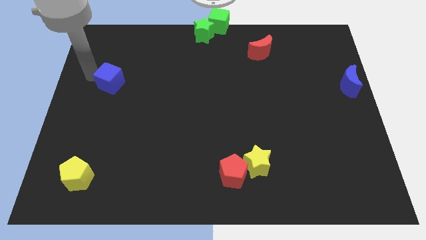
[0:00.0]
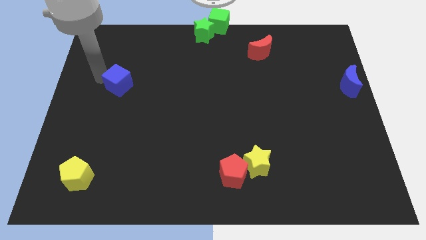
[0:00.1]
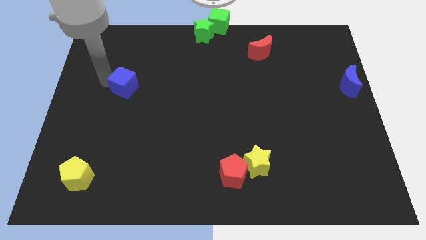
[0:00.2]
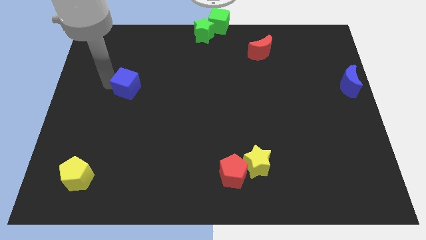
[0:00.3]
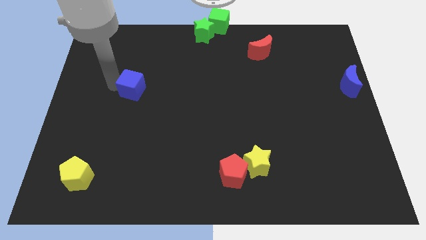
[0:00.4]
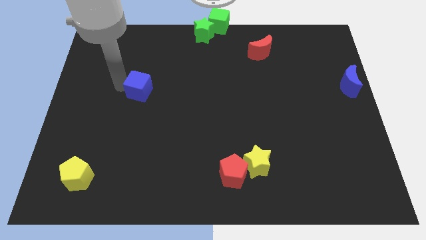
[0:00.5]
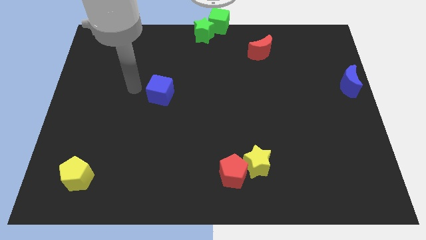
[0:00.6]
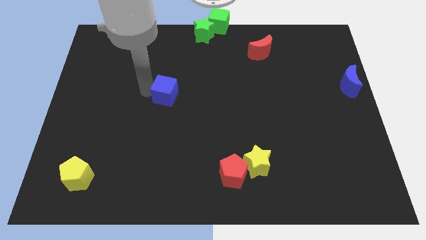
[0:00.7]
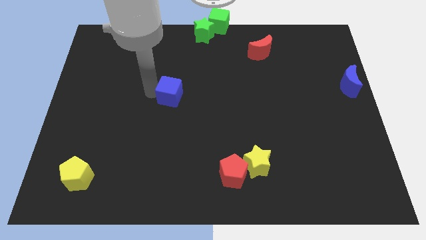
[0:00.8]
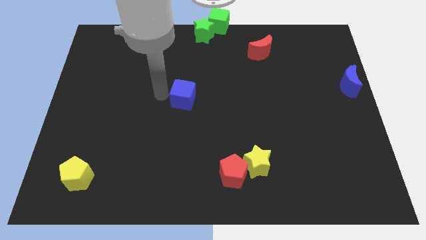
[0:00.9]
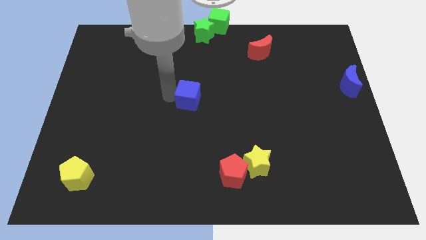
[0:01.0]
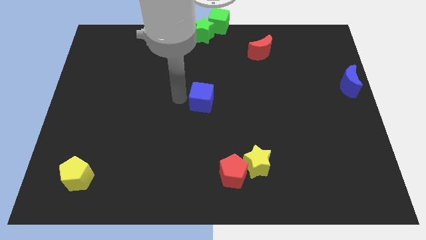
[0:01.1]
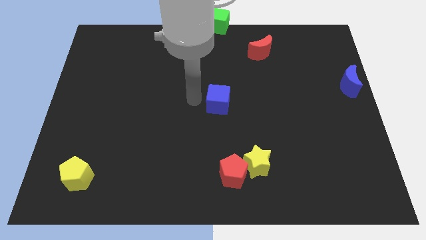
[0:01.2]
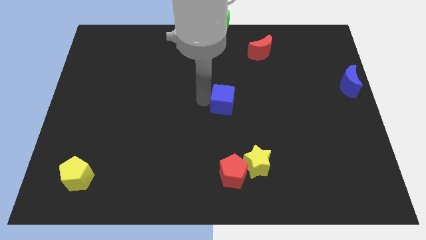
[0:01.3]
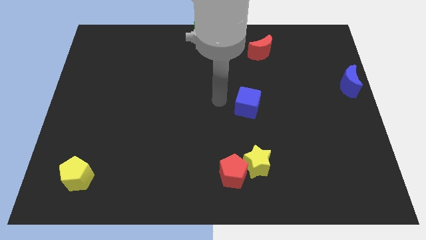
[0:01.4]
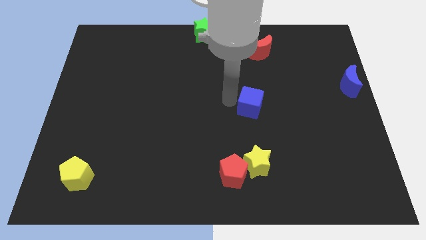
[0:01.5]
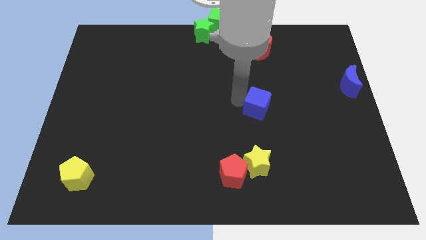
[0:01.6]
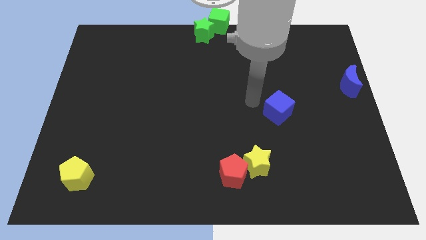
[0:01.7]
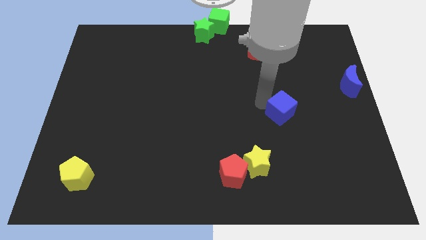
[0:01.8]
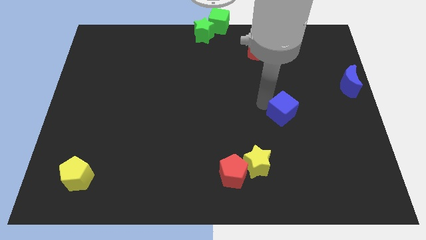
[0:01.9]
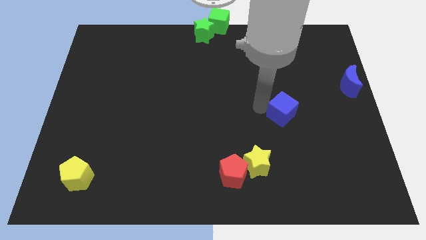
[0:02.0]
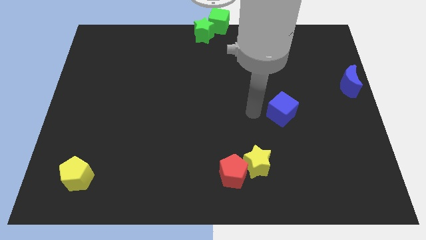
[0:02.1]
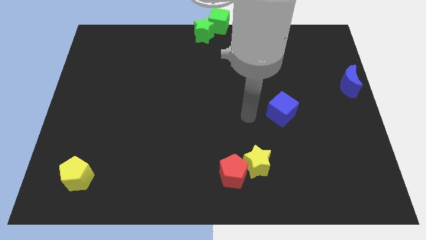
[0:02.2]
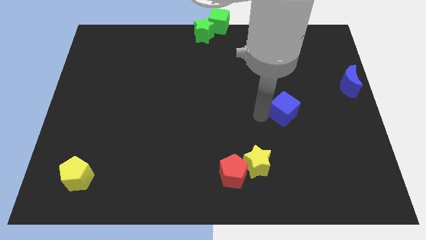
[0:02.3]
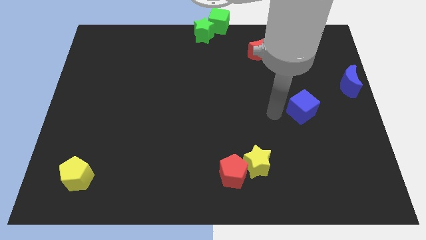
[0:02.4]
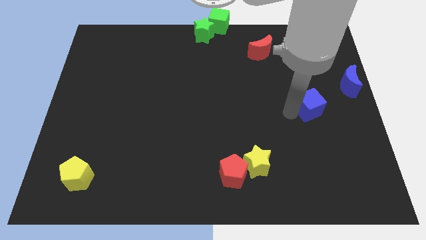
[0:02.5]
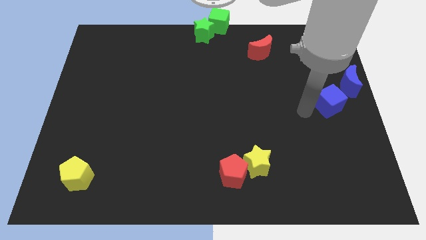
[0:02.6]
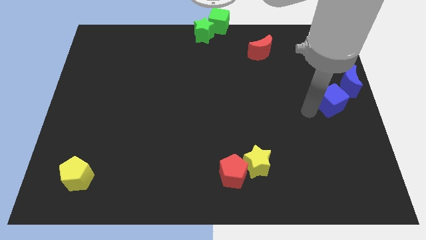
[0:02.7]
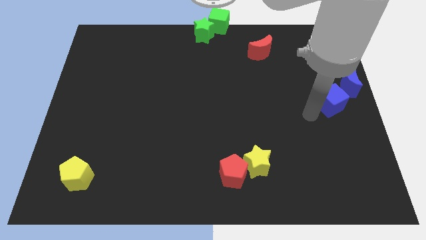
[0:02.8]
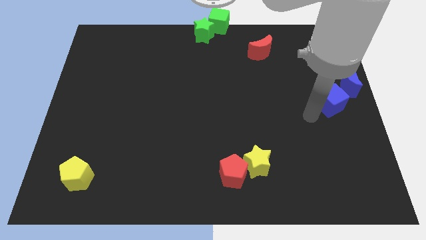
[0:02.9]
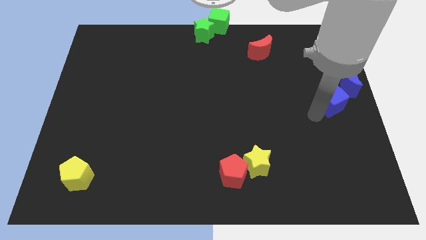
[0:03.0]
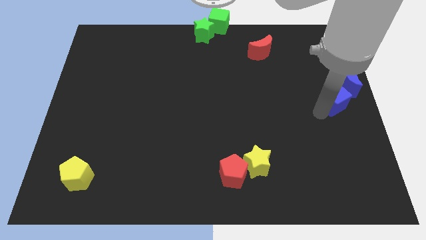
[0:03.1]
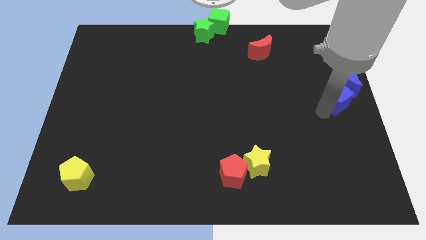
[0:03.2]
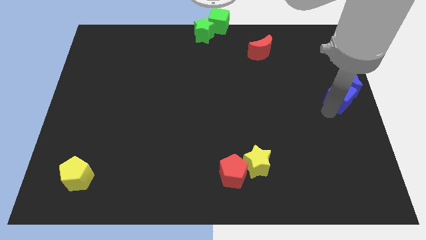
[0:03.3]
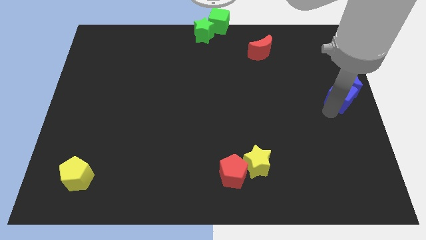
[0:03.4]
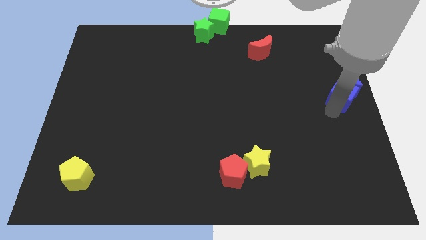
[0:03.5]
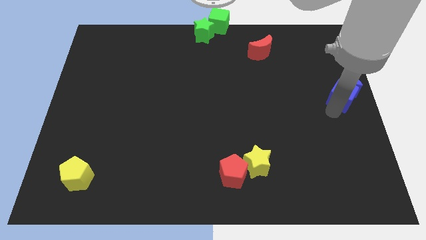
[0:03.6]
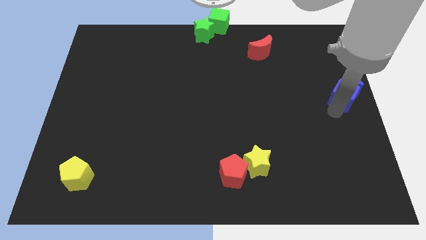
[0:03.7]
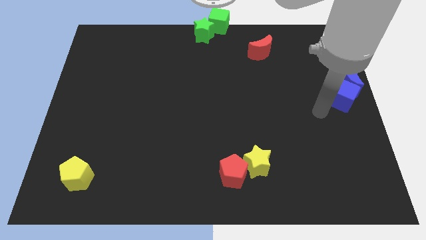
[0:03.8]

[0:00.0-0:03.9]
put the blue blocks together

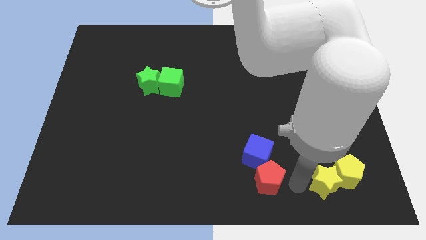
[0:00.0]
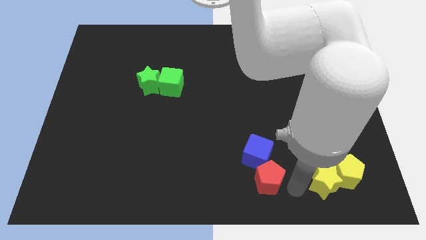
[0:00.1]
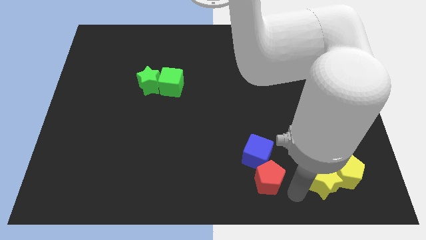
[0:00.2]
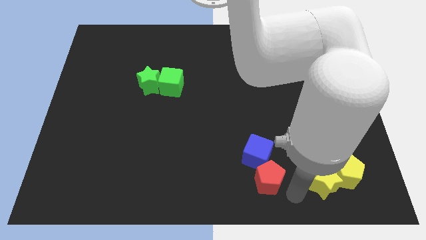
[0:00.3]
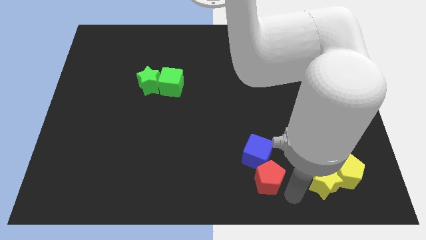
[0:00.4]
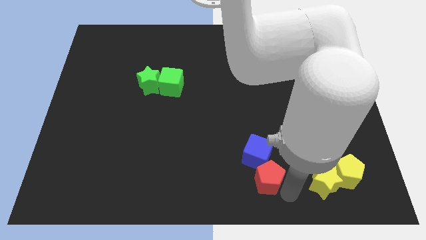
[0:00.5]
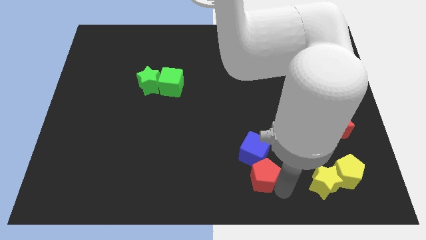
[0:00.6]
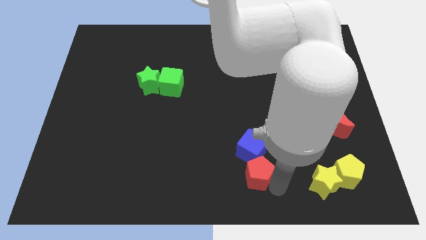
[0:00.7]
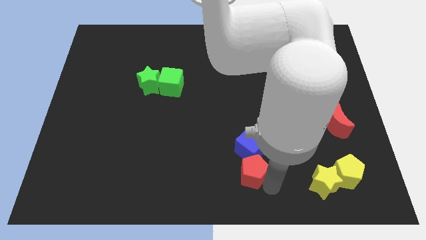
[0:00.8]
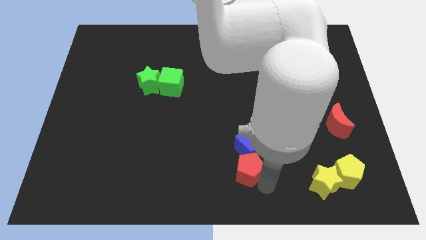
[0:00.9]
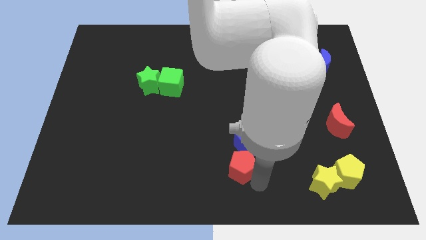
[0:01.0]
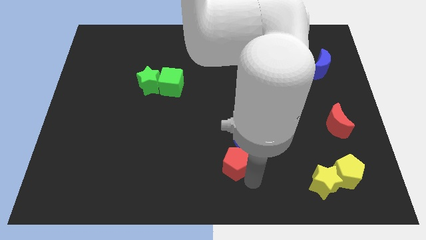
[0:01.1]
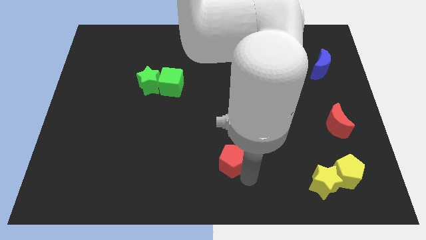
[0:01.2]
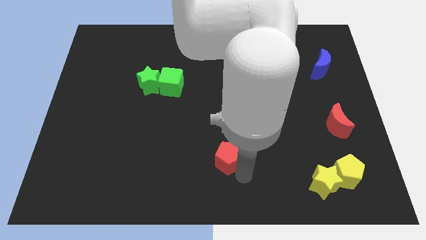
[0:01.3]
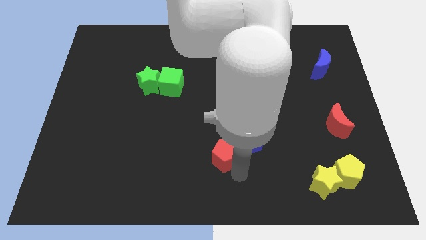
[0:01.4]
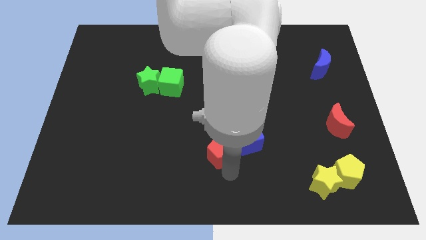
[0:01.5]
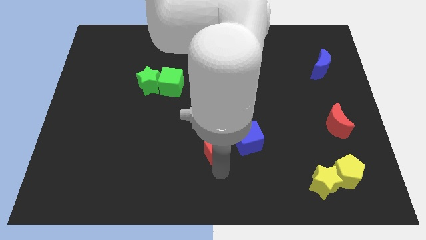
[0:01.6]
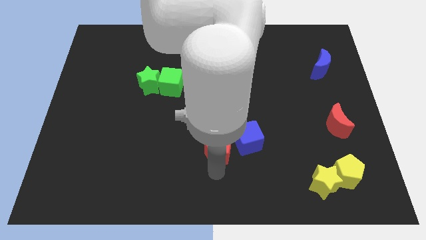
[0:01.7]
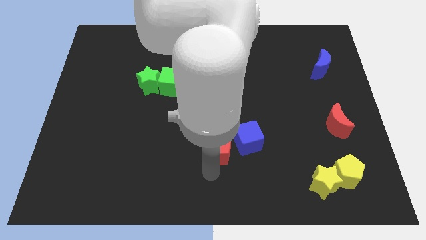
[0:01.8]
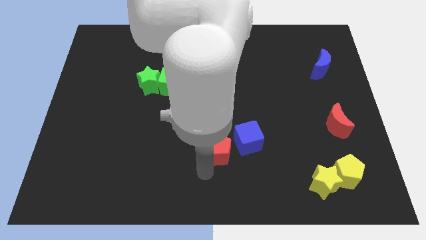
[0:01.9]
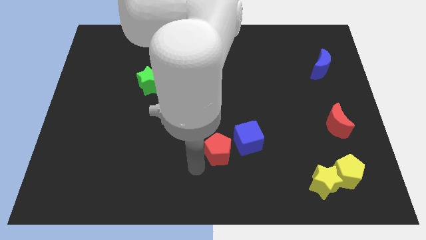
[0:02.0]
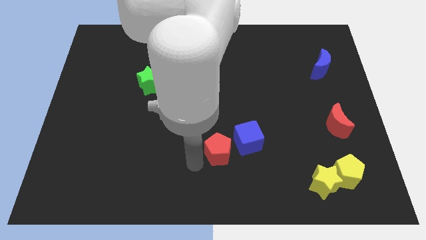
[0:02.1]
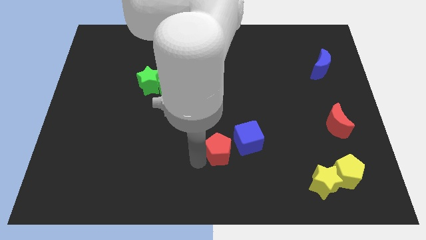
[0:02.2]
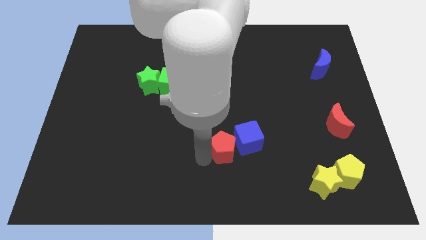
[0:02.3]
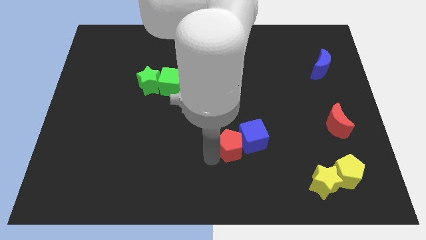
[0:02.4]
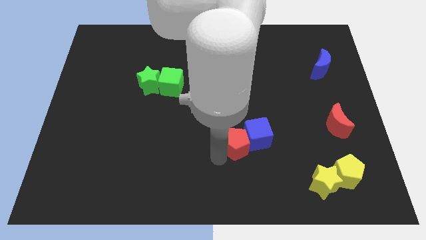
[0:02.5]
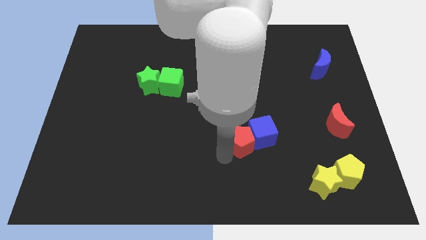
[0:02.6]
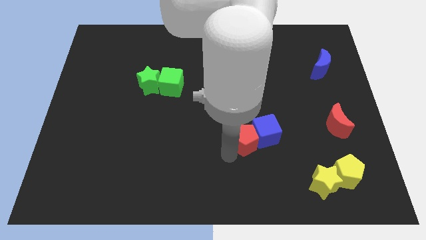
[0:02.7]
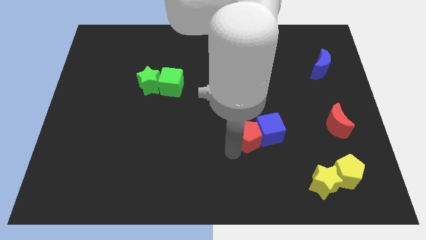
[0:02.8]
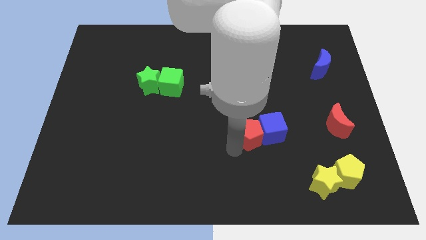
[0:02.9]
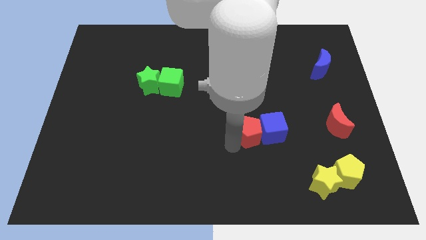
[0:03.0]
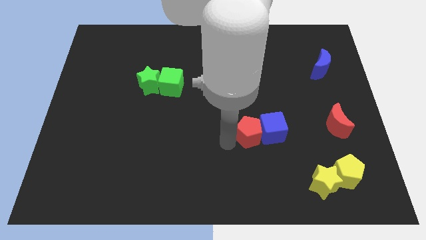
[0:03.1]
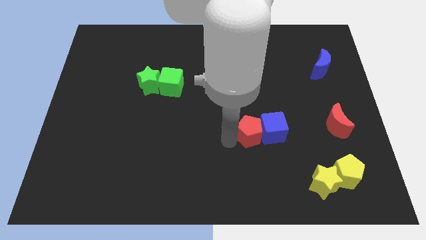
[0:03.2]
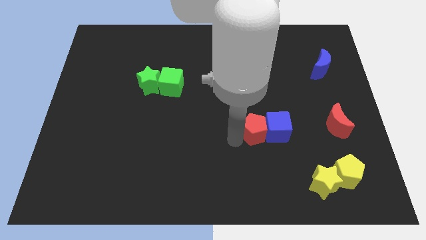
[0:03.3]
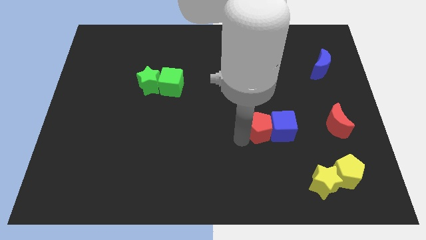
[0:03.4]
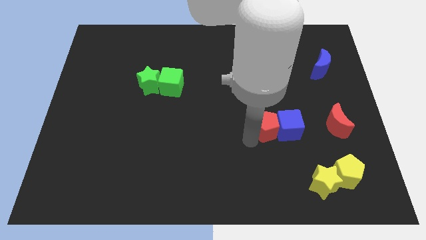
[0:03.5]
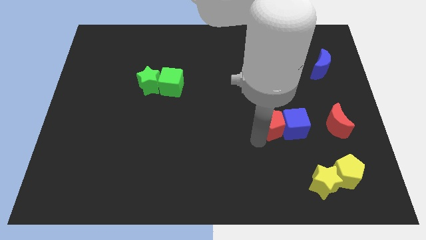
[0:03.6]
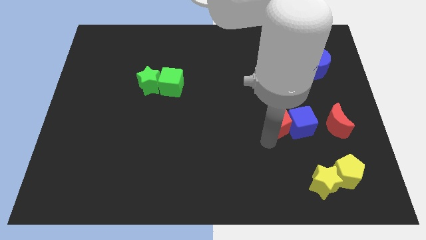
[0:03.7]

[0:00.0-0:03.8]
push the red pentagon to the left of the blue cube

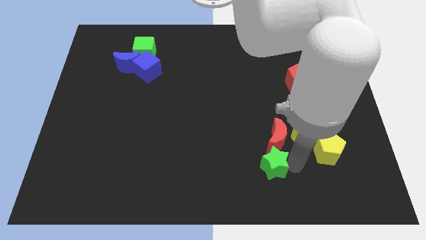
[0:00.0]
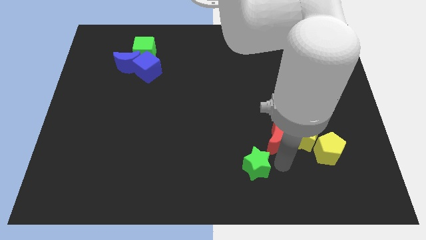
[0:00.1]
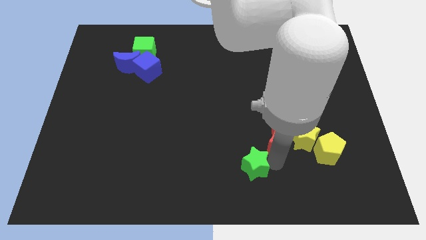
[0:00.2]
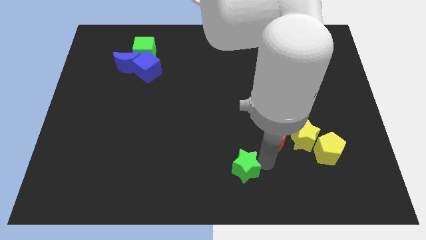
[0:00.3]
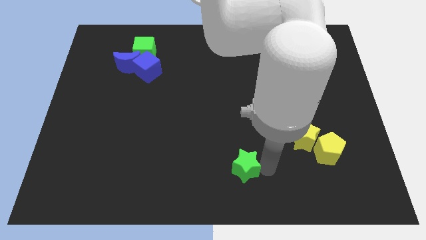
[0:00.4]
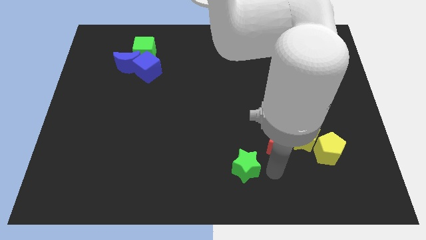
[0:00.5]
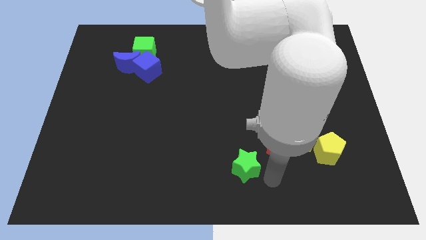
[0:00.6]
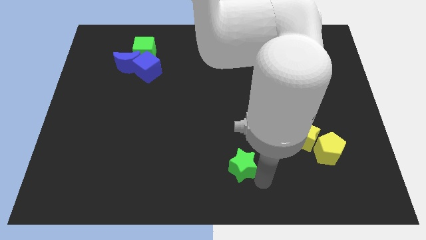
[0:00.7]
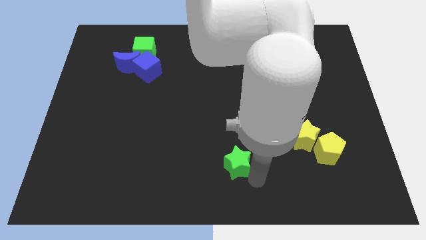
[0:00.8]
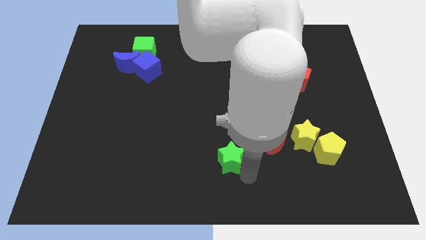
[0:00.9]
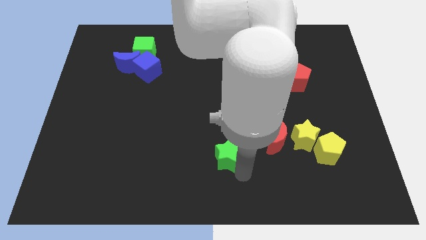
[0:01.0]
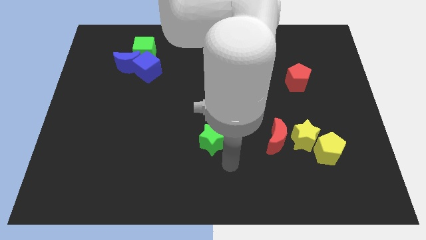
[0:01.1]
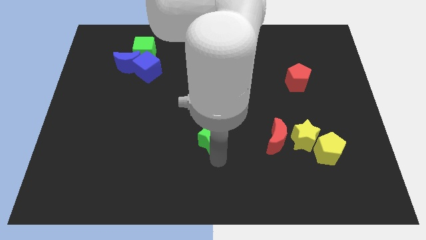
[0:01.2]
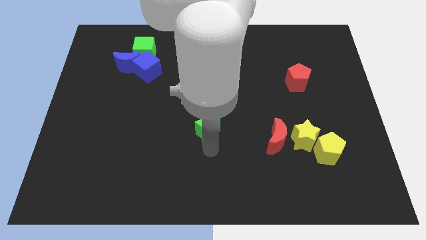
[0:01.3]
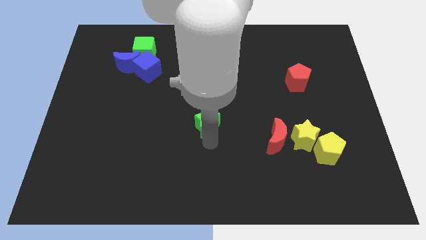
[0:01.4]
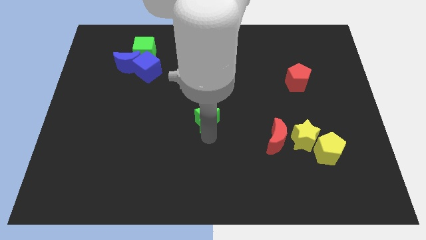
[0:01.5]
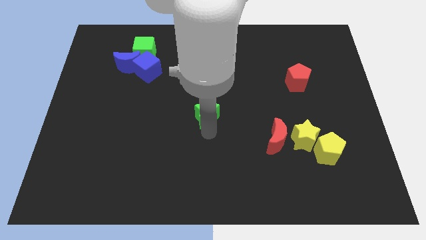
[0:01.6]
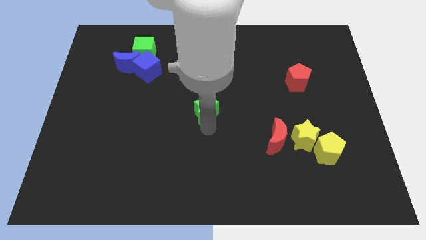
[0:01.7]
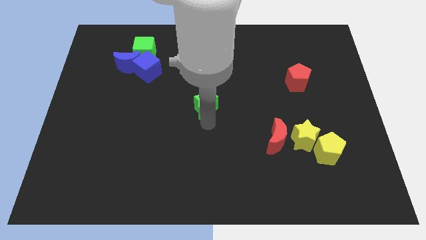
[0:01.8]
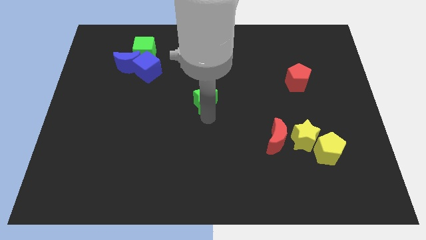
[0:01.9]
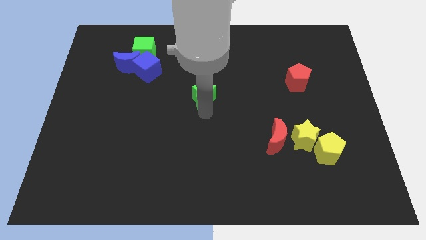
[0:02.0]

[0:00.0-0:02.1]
move green star towards middle of the board
